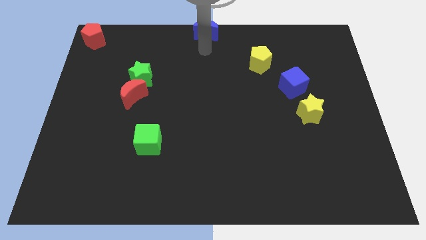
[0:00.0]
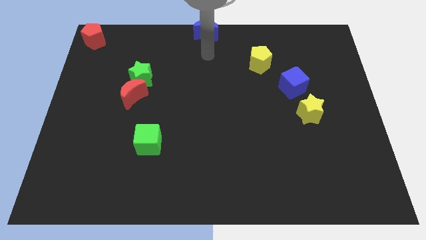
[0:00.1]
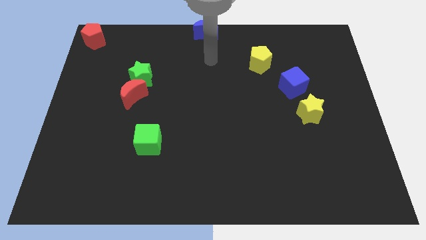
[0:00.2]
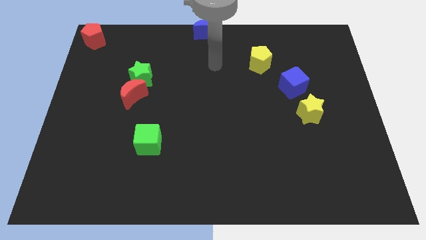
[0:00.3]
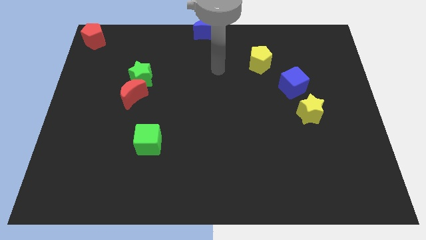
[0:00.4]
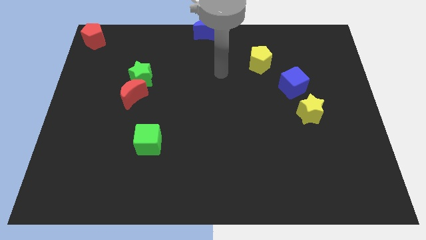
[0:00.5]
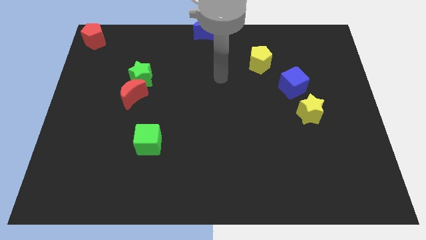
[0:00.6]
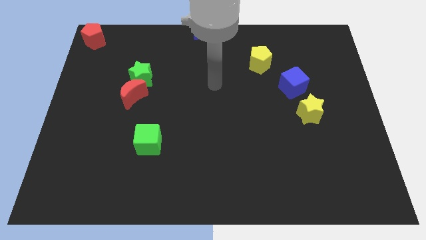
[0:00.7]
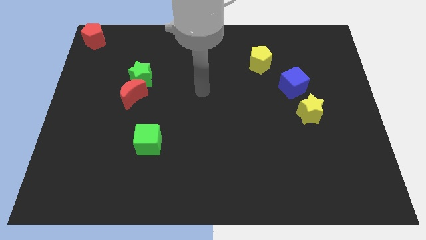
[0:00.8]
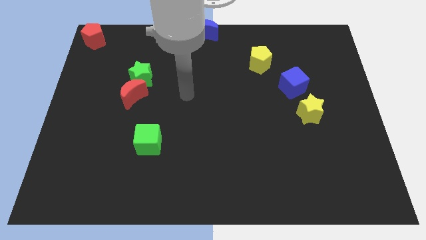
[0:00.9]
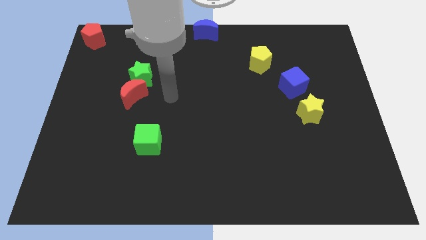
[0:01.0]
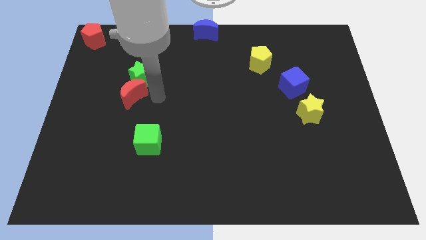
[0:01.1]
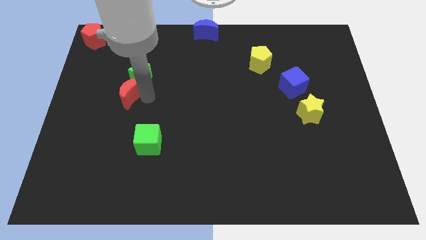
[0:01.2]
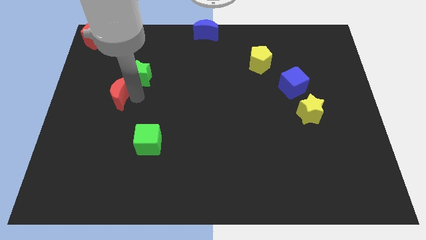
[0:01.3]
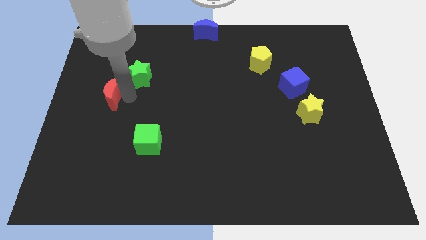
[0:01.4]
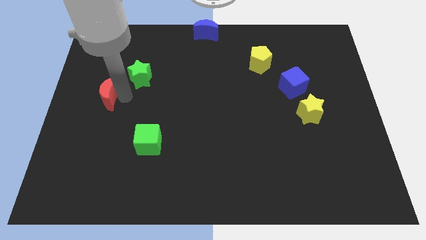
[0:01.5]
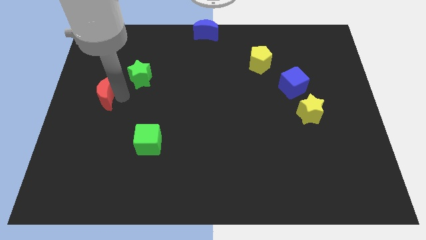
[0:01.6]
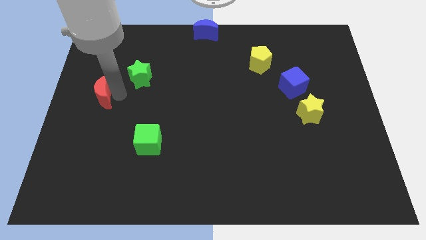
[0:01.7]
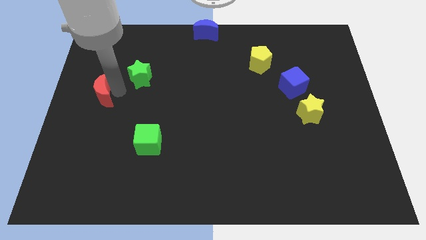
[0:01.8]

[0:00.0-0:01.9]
slightly push the red moon

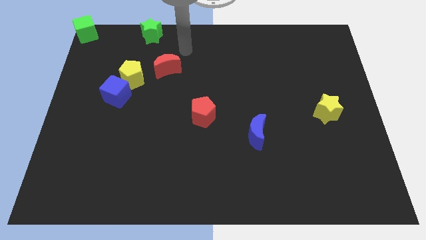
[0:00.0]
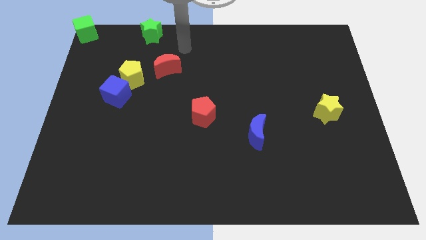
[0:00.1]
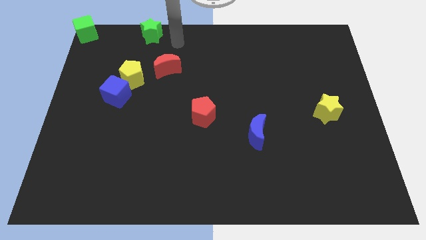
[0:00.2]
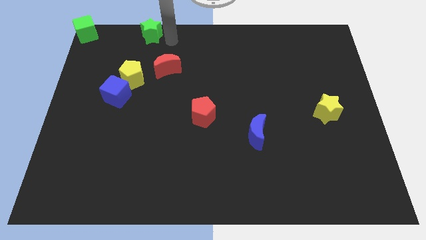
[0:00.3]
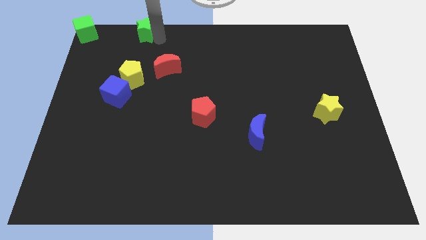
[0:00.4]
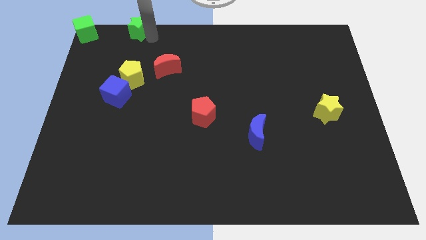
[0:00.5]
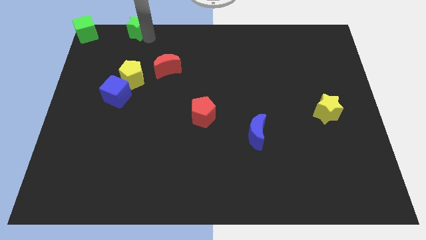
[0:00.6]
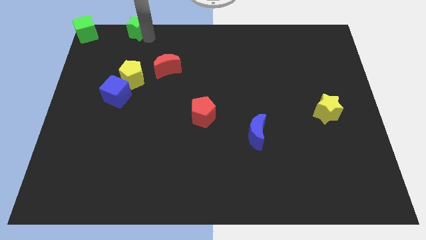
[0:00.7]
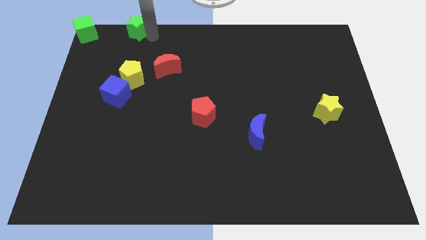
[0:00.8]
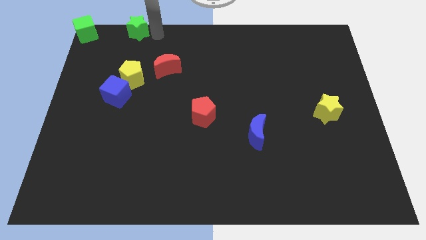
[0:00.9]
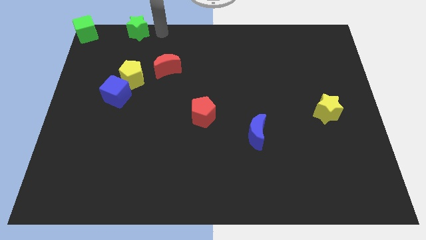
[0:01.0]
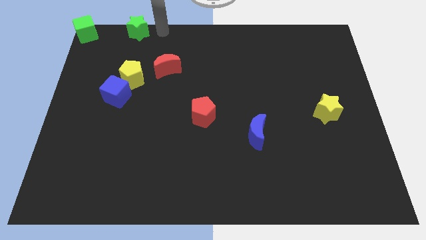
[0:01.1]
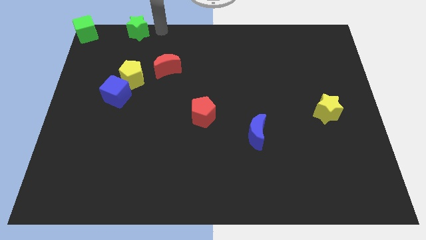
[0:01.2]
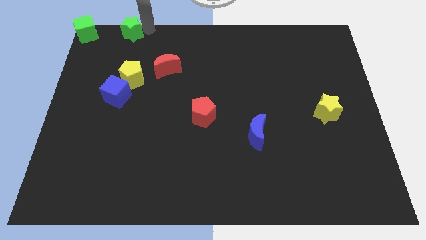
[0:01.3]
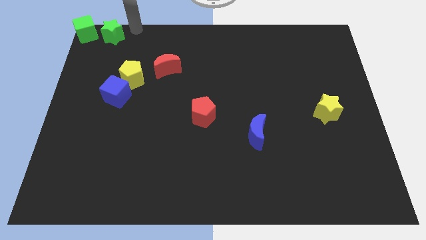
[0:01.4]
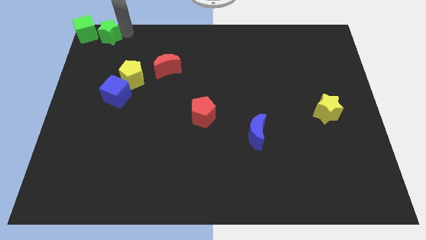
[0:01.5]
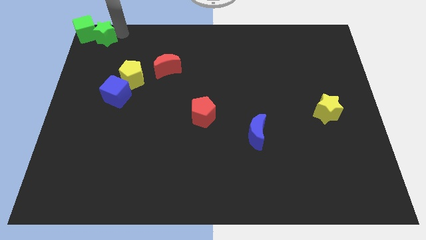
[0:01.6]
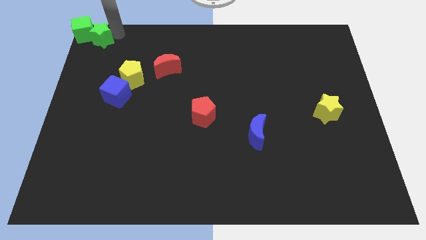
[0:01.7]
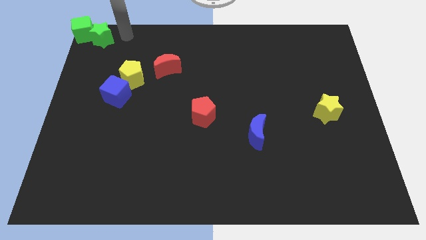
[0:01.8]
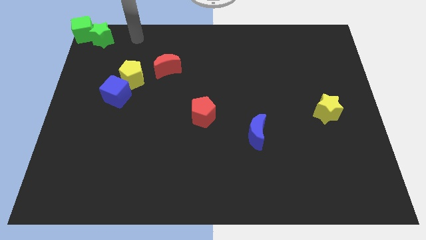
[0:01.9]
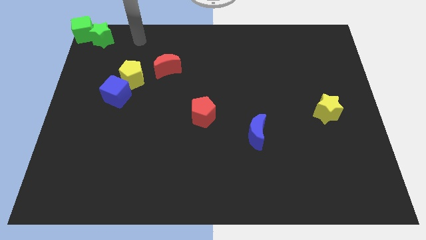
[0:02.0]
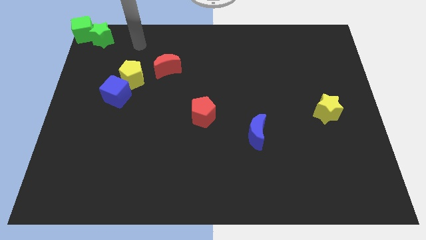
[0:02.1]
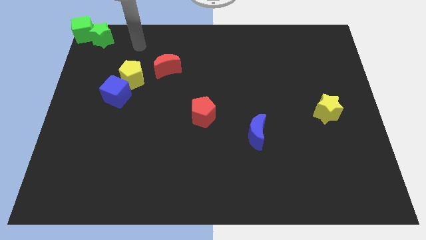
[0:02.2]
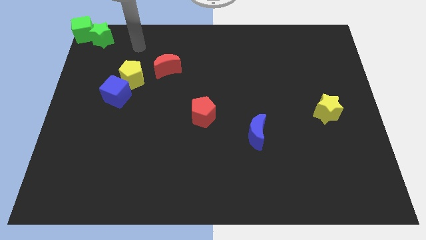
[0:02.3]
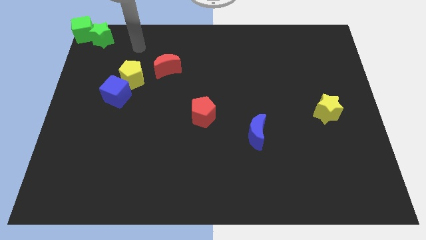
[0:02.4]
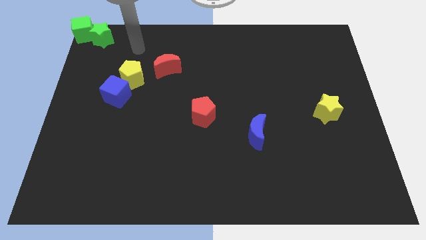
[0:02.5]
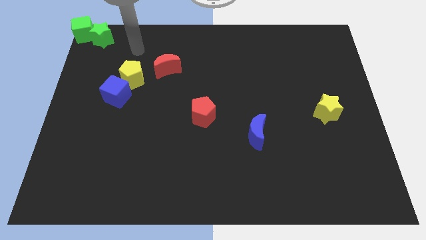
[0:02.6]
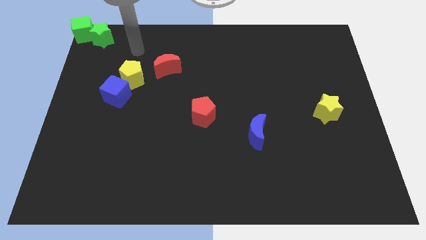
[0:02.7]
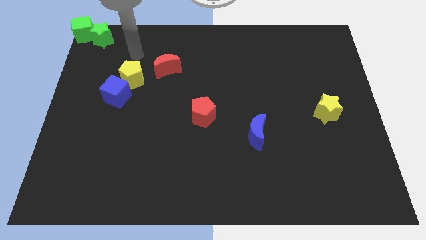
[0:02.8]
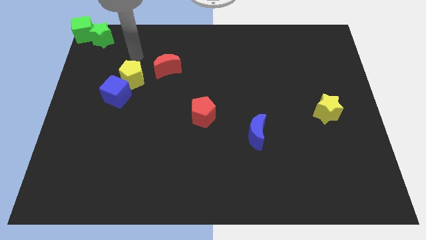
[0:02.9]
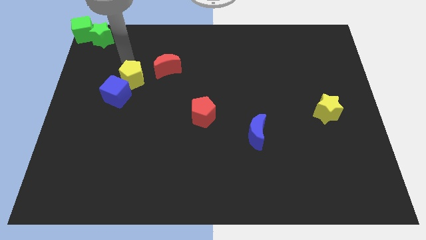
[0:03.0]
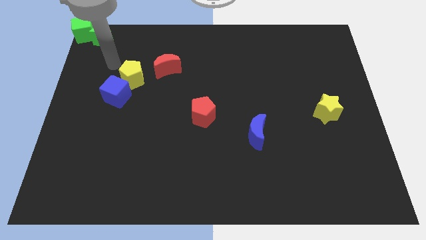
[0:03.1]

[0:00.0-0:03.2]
push the green star into the green cube

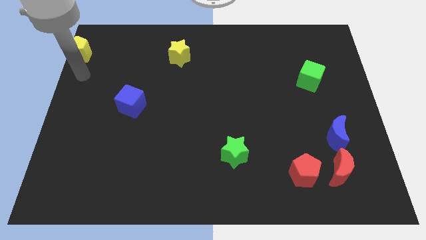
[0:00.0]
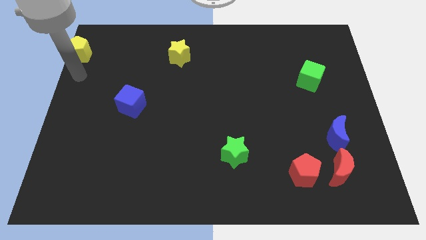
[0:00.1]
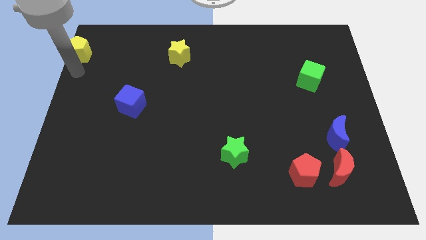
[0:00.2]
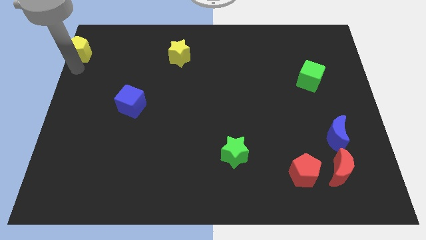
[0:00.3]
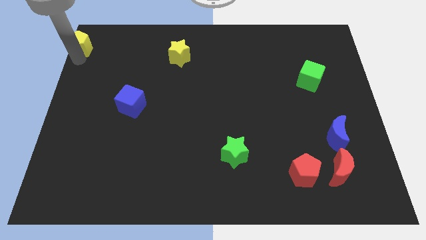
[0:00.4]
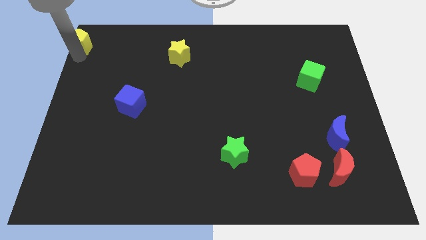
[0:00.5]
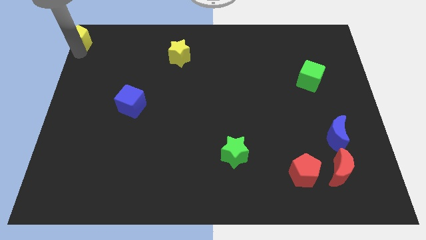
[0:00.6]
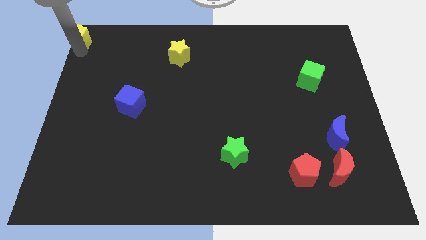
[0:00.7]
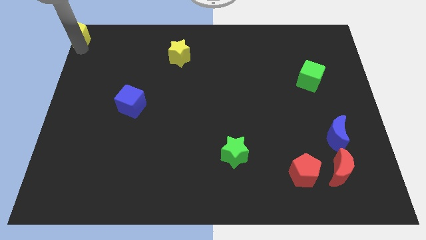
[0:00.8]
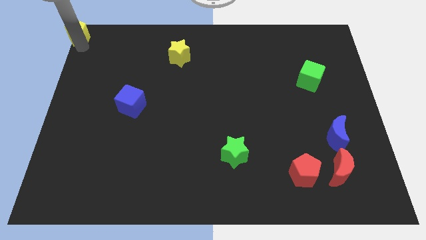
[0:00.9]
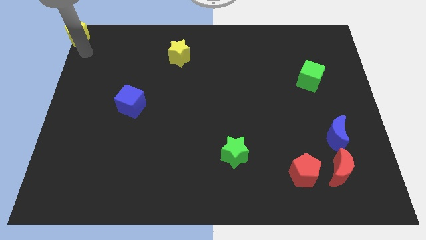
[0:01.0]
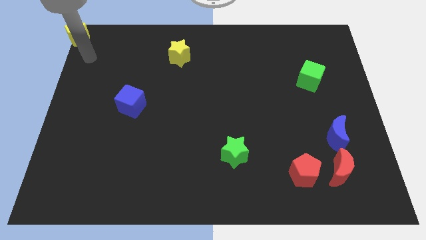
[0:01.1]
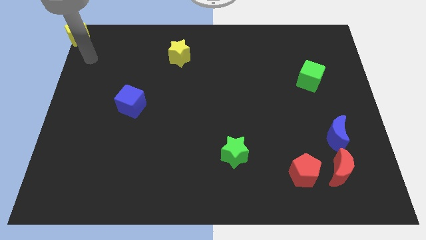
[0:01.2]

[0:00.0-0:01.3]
move yellow pentagon to the top left corner

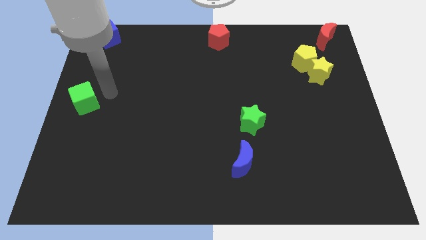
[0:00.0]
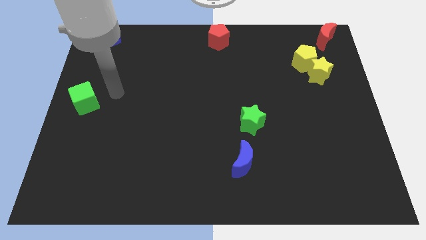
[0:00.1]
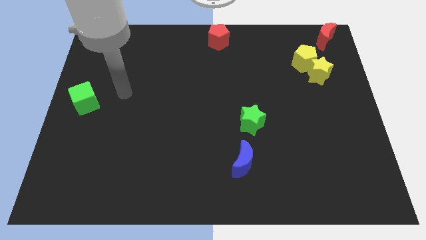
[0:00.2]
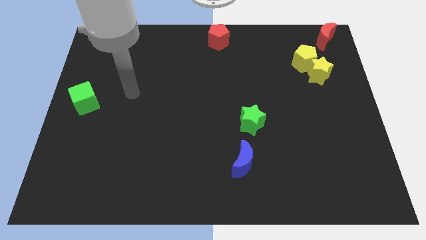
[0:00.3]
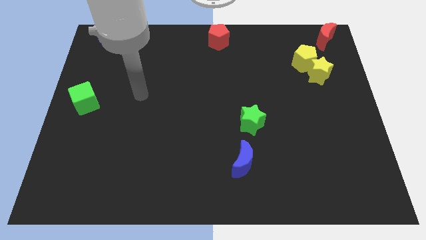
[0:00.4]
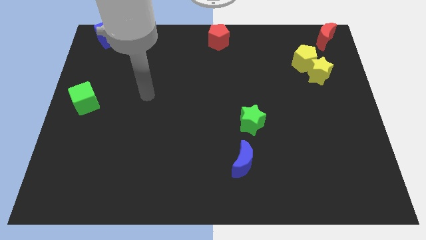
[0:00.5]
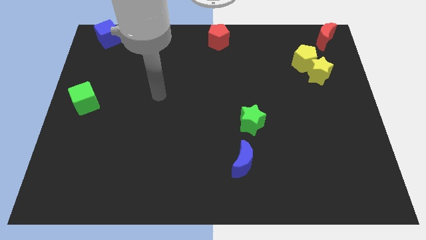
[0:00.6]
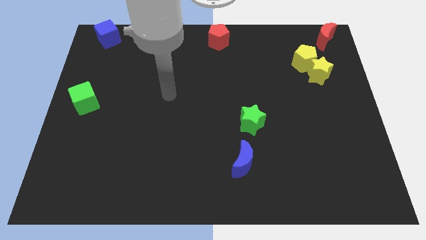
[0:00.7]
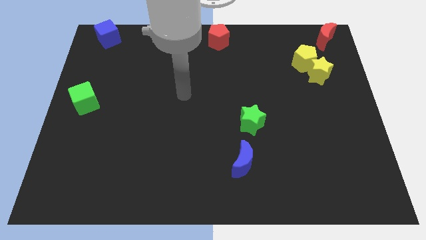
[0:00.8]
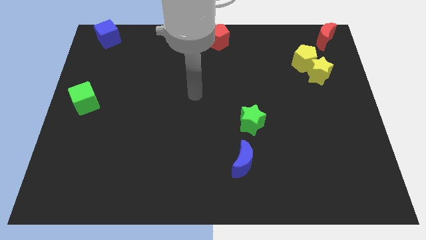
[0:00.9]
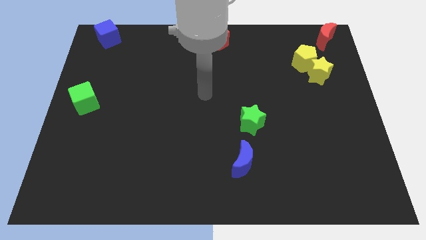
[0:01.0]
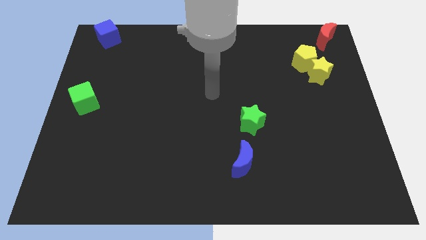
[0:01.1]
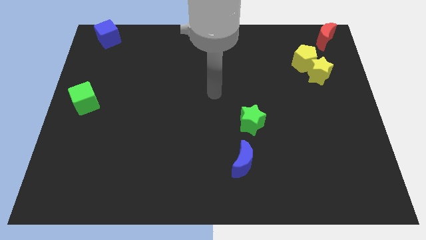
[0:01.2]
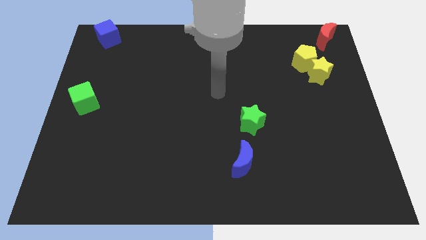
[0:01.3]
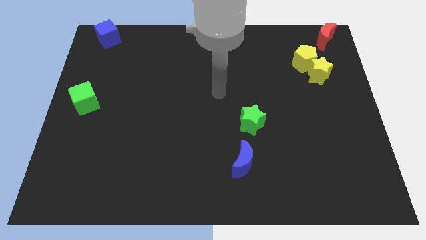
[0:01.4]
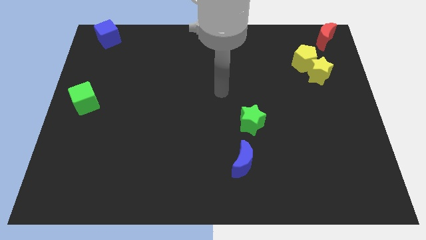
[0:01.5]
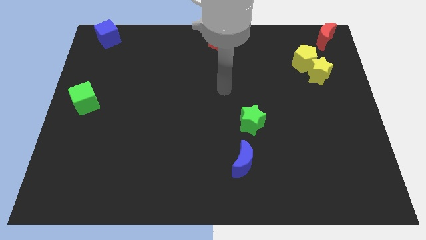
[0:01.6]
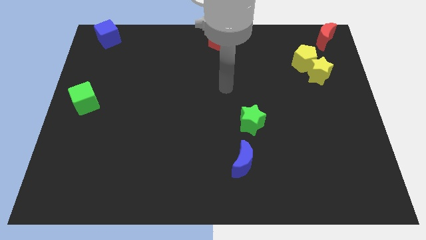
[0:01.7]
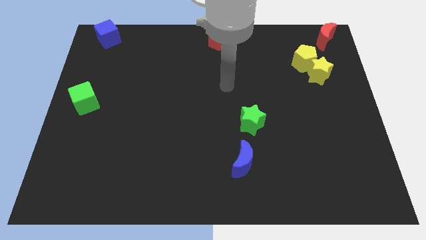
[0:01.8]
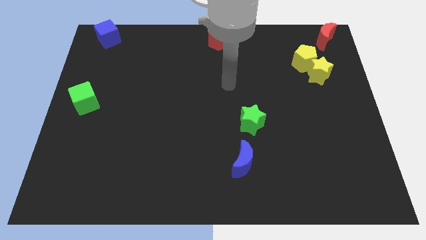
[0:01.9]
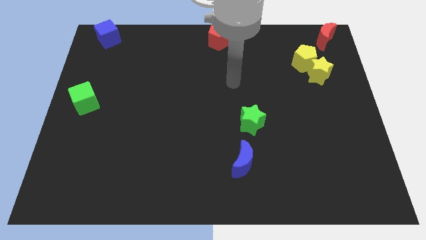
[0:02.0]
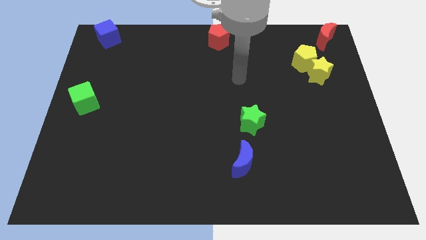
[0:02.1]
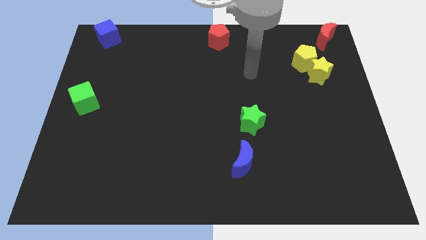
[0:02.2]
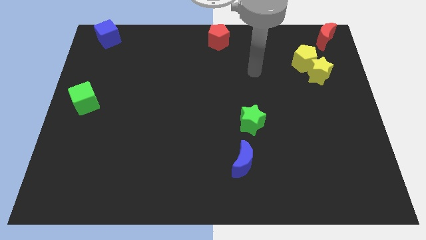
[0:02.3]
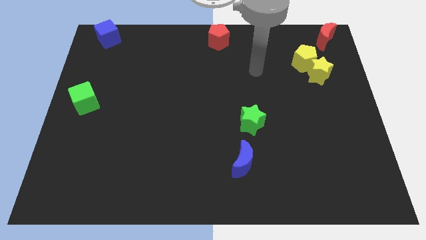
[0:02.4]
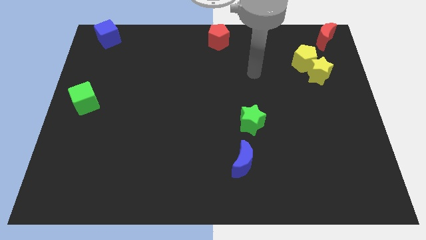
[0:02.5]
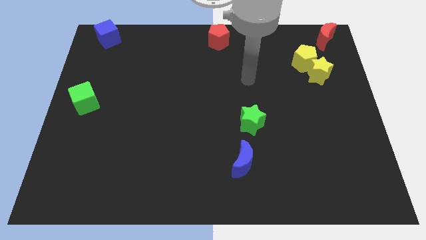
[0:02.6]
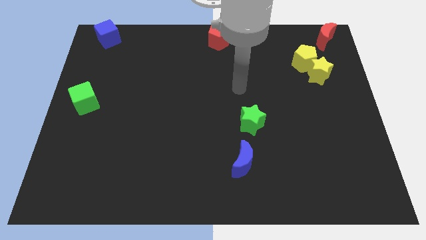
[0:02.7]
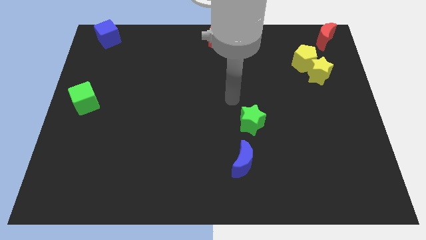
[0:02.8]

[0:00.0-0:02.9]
move your arm away from the green cube
